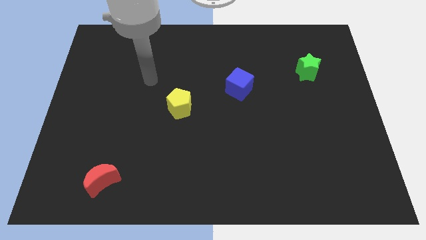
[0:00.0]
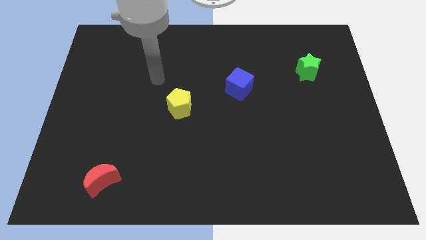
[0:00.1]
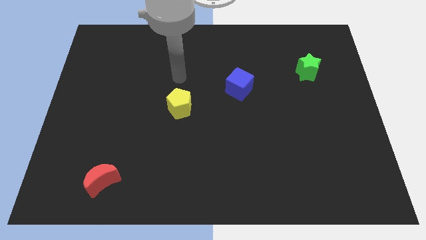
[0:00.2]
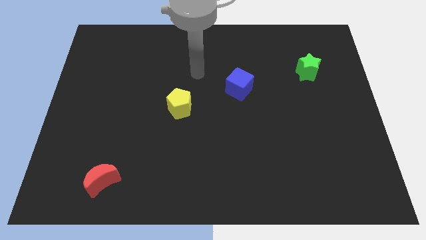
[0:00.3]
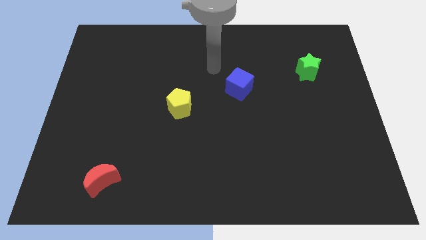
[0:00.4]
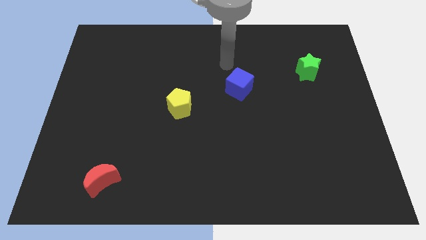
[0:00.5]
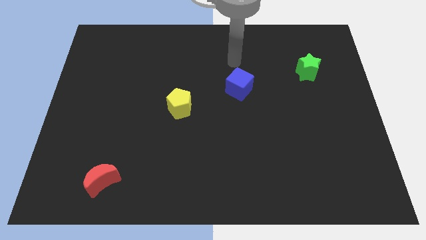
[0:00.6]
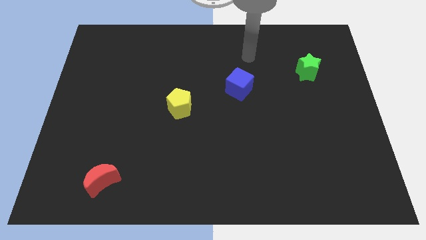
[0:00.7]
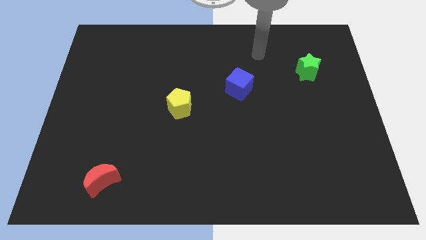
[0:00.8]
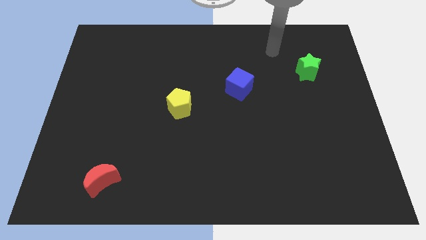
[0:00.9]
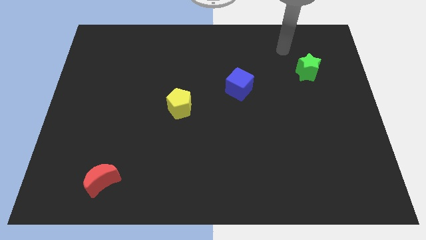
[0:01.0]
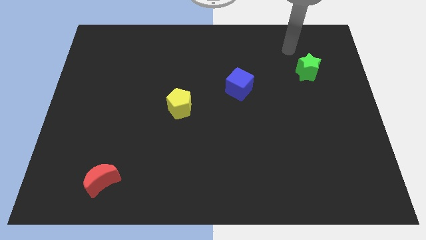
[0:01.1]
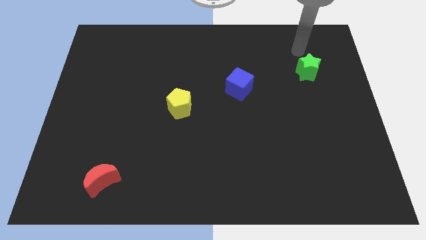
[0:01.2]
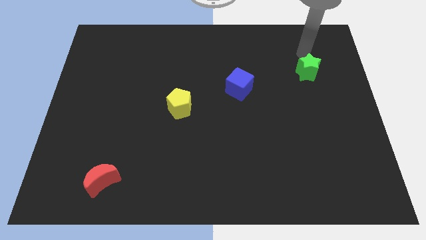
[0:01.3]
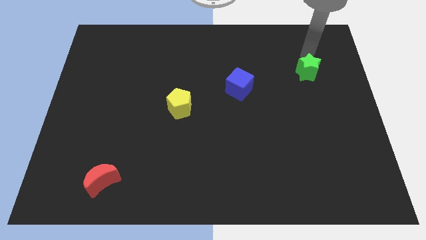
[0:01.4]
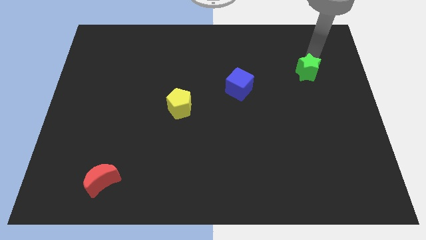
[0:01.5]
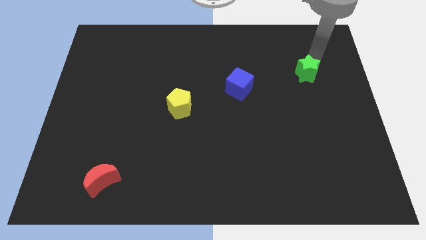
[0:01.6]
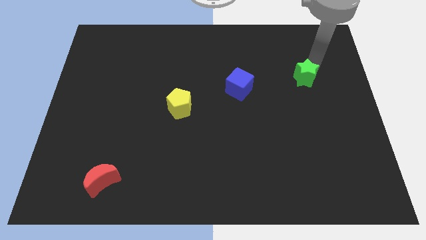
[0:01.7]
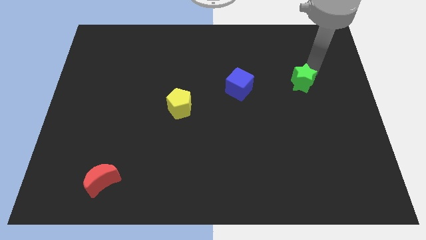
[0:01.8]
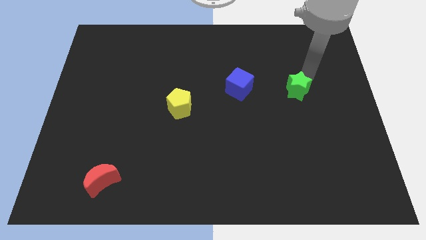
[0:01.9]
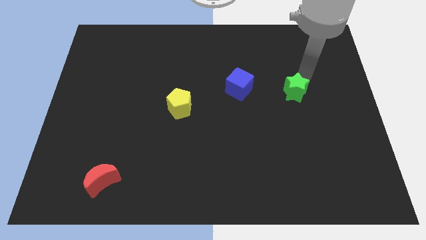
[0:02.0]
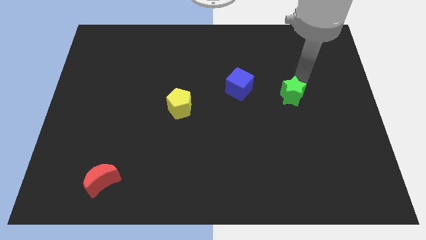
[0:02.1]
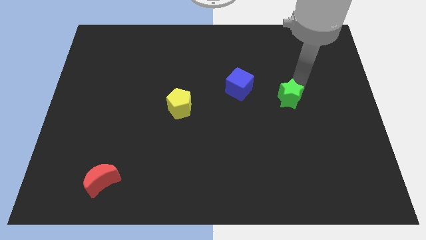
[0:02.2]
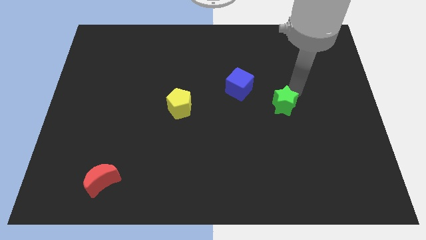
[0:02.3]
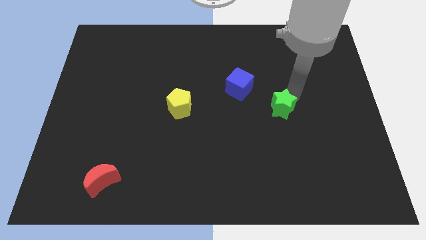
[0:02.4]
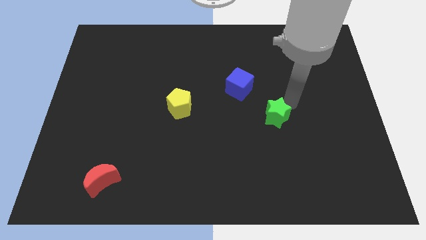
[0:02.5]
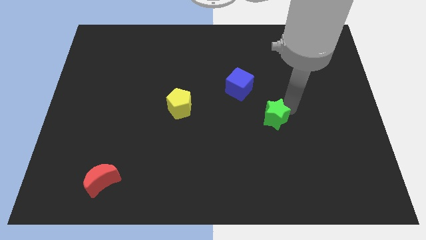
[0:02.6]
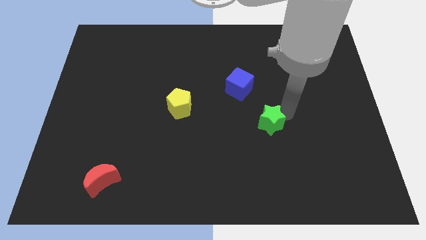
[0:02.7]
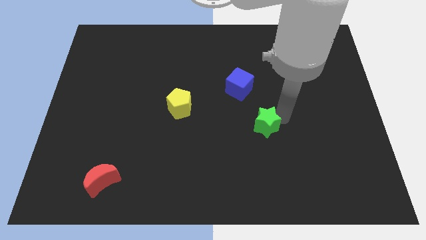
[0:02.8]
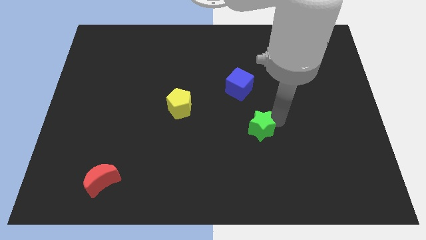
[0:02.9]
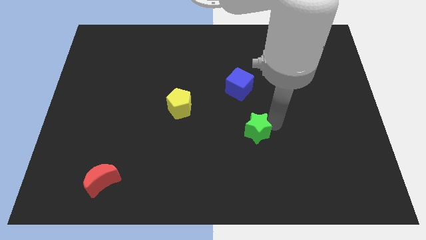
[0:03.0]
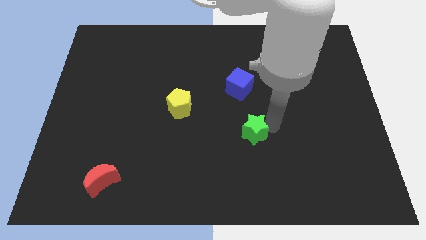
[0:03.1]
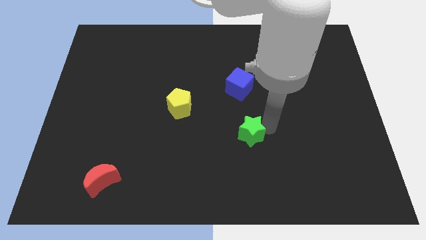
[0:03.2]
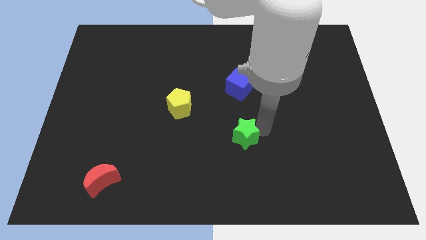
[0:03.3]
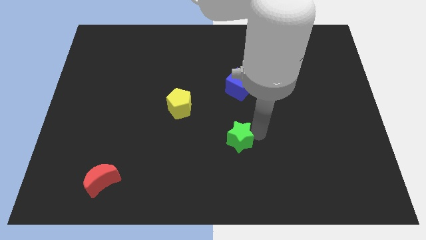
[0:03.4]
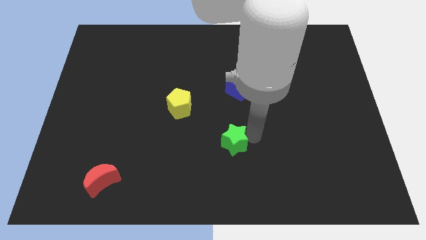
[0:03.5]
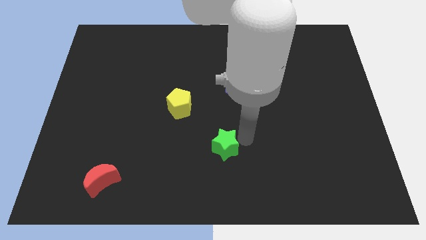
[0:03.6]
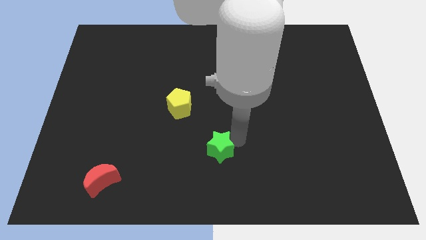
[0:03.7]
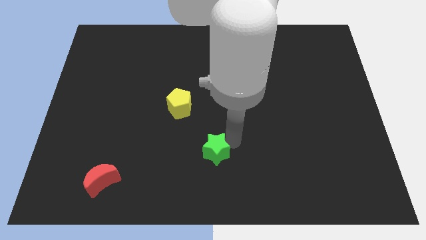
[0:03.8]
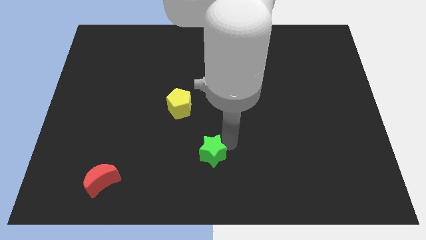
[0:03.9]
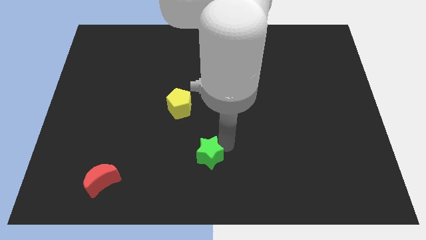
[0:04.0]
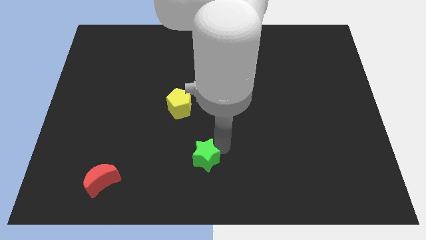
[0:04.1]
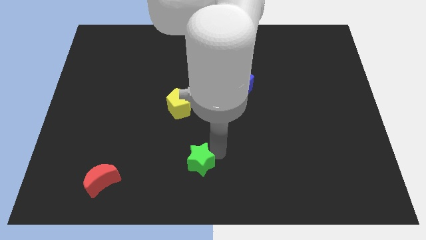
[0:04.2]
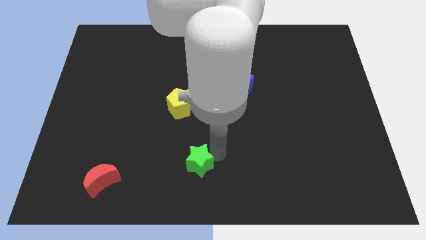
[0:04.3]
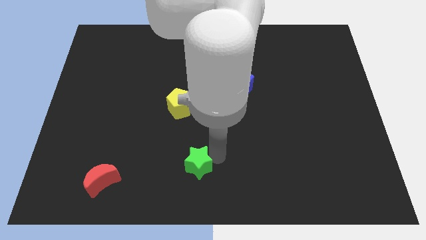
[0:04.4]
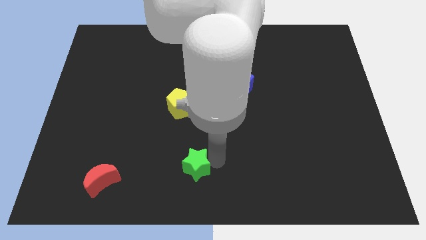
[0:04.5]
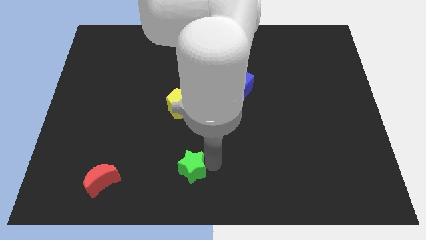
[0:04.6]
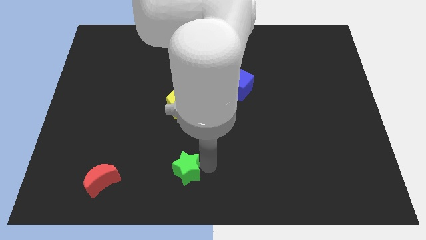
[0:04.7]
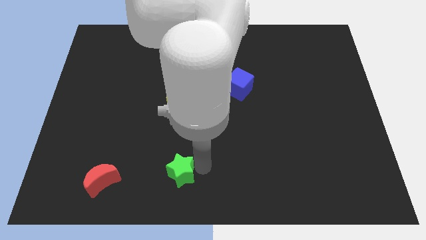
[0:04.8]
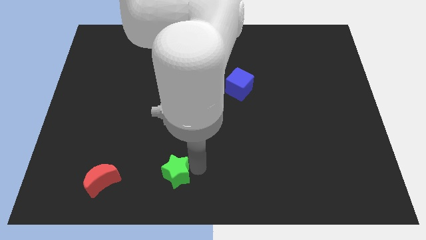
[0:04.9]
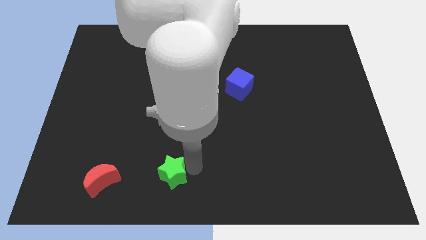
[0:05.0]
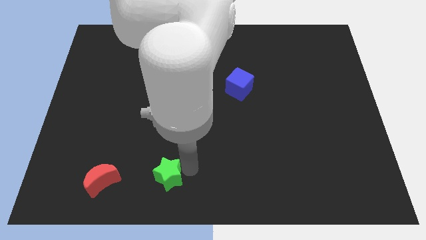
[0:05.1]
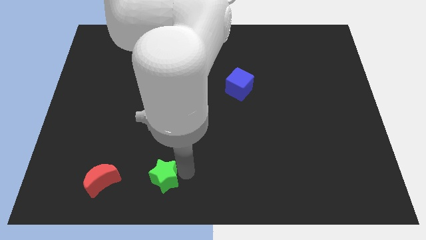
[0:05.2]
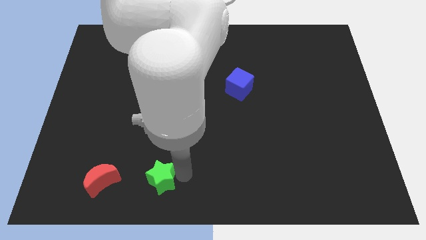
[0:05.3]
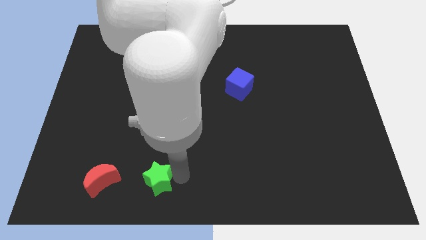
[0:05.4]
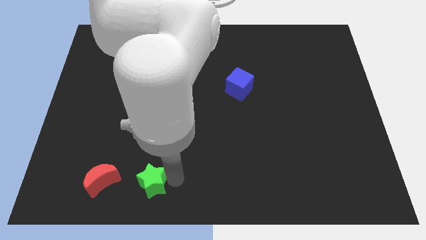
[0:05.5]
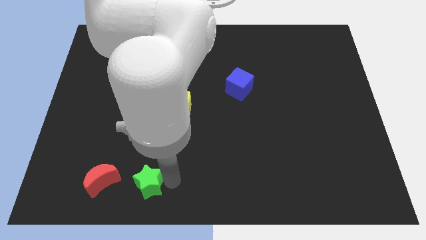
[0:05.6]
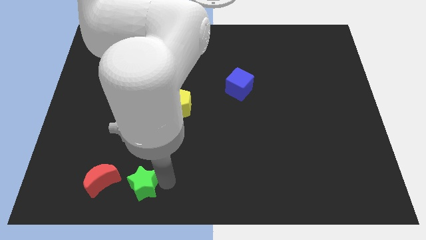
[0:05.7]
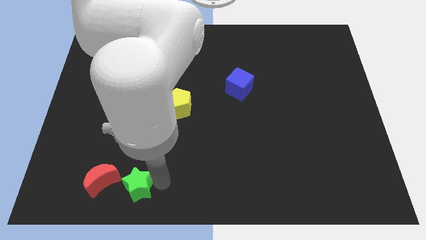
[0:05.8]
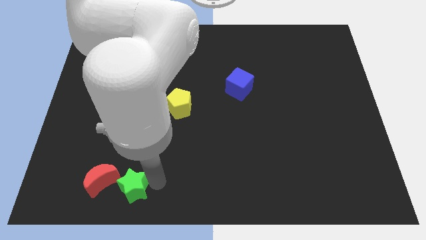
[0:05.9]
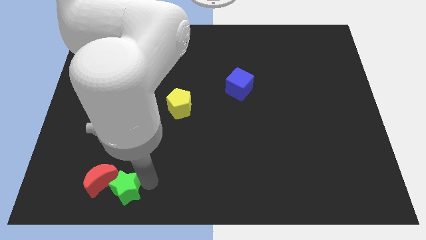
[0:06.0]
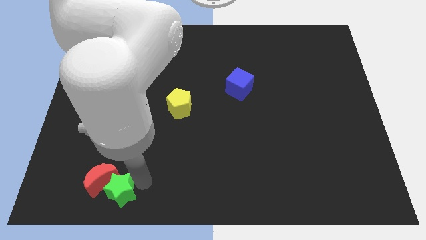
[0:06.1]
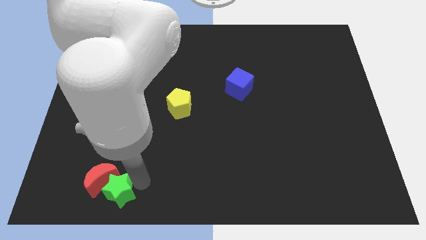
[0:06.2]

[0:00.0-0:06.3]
move the star close to the red moon

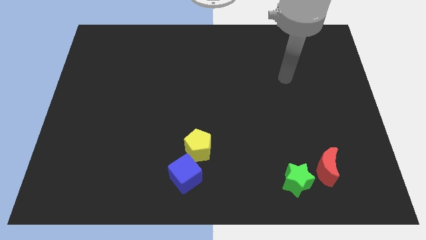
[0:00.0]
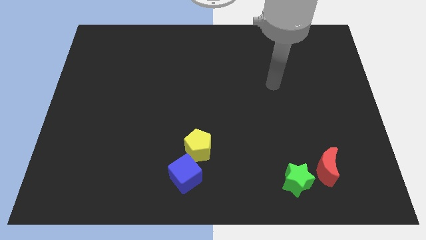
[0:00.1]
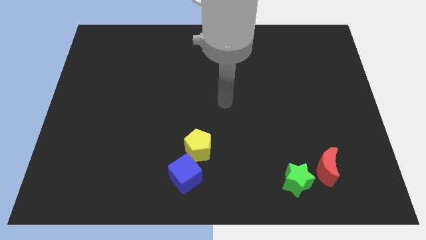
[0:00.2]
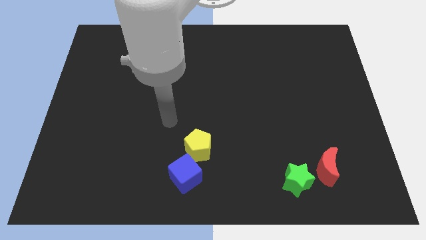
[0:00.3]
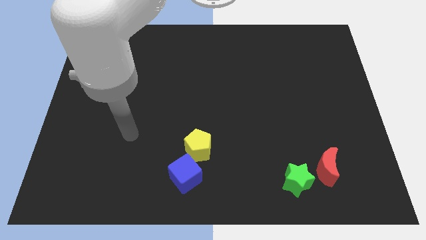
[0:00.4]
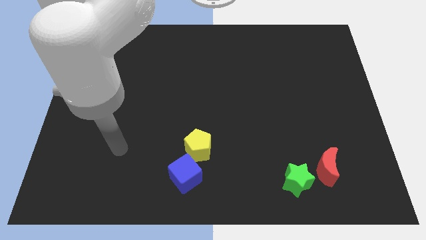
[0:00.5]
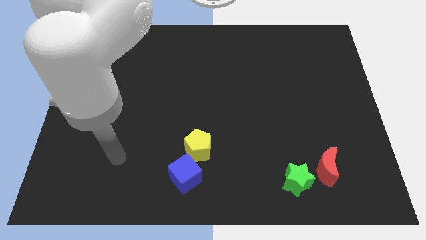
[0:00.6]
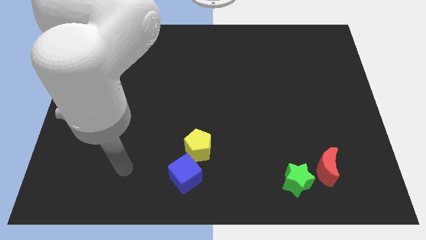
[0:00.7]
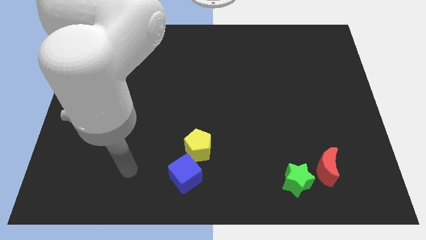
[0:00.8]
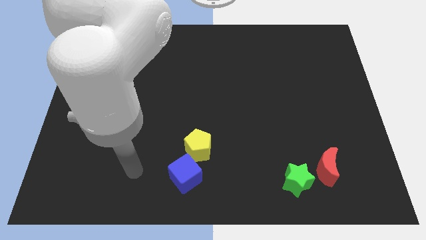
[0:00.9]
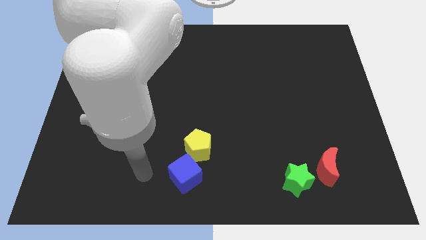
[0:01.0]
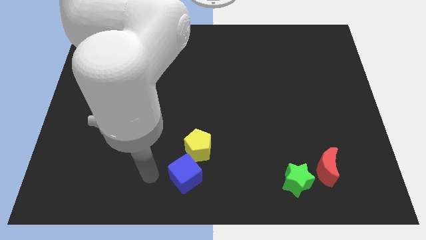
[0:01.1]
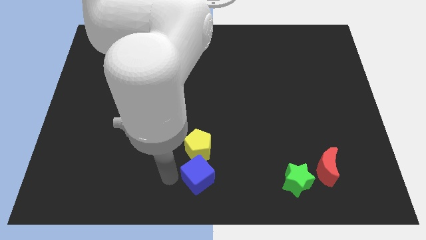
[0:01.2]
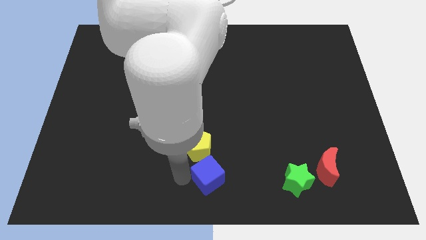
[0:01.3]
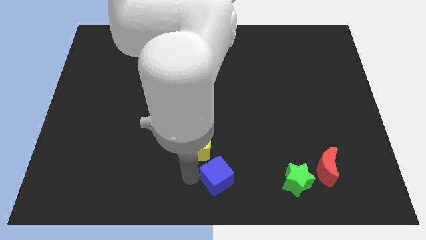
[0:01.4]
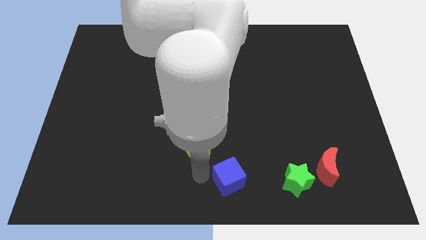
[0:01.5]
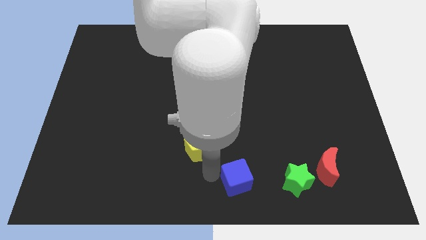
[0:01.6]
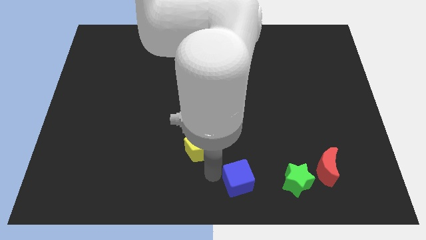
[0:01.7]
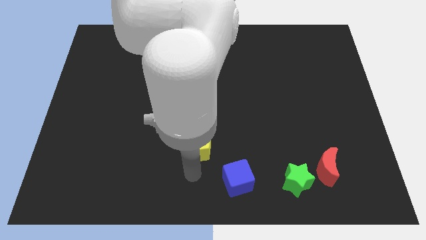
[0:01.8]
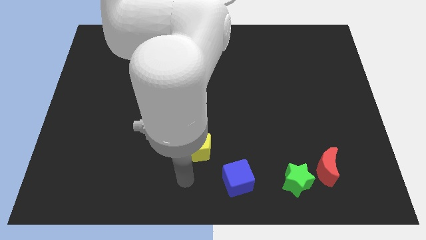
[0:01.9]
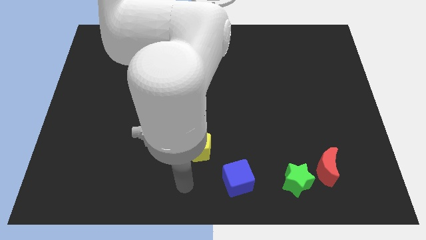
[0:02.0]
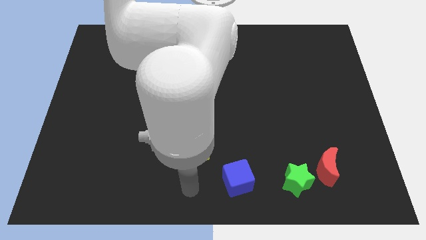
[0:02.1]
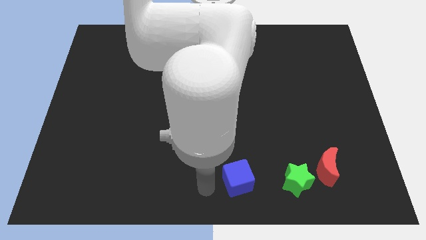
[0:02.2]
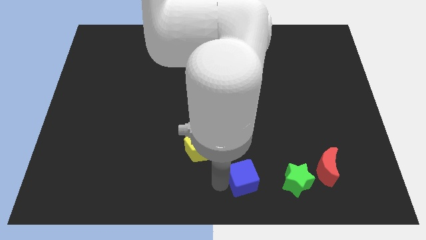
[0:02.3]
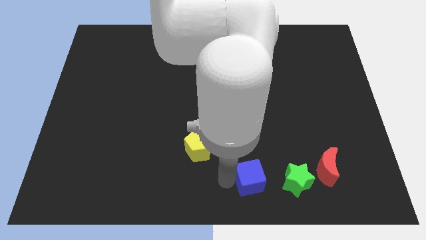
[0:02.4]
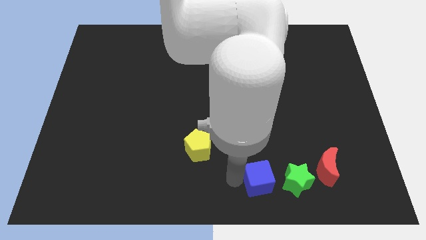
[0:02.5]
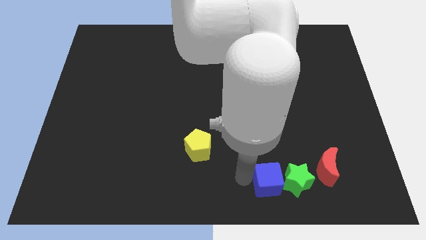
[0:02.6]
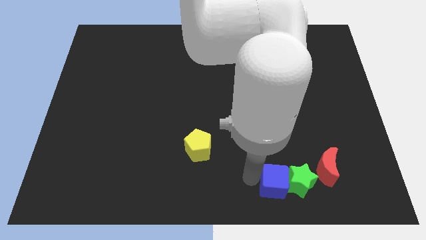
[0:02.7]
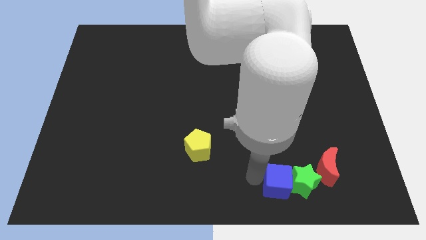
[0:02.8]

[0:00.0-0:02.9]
slide the blue cube to the green block
